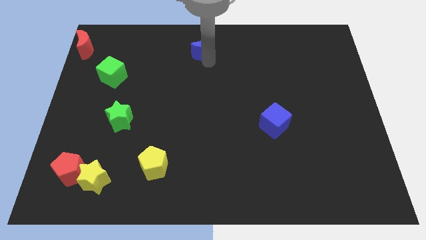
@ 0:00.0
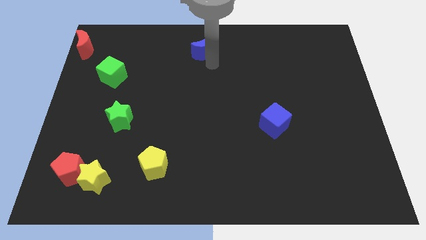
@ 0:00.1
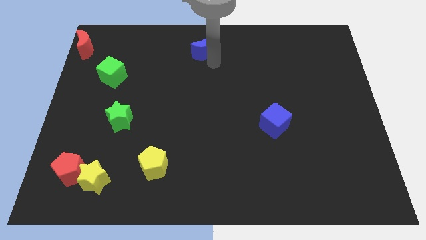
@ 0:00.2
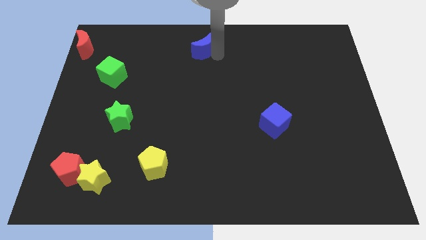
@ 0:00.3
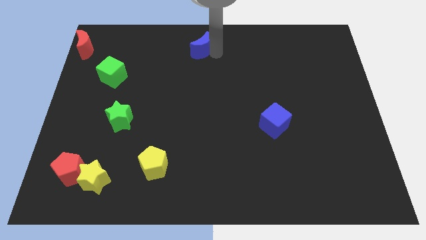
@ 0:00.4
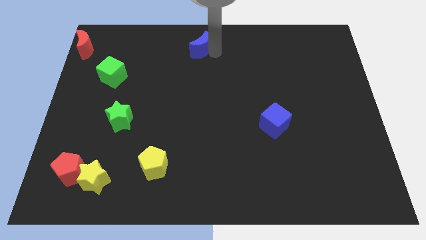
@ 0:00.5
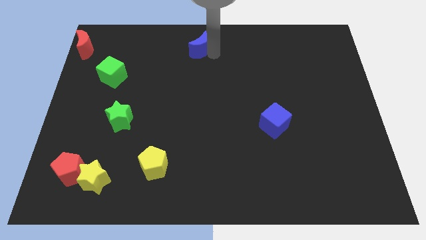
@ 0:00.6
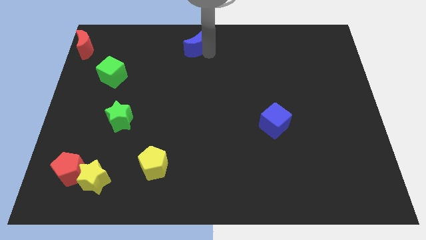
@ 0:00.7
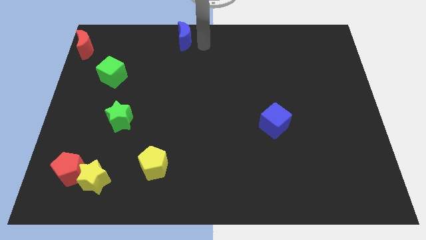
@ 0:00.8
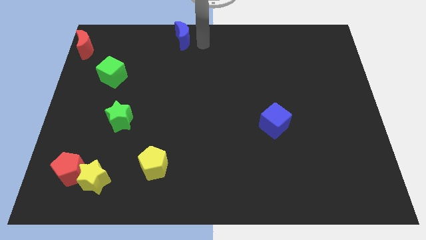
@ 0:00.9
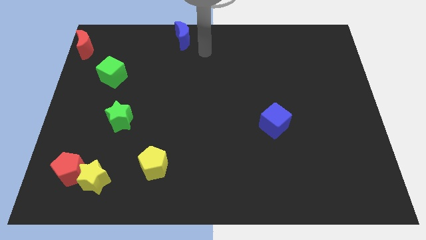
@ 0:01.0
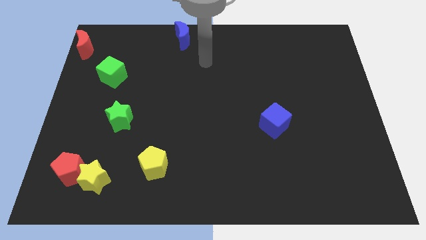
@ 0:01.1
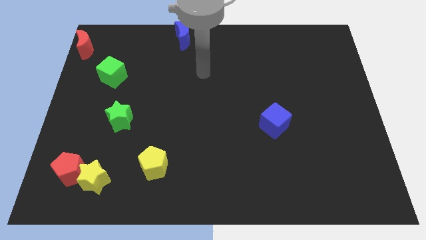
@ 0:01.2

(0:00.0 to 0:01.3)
move the blue moon towards the top side of the board

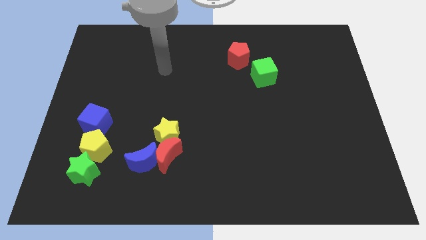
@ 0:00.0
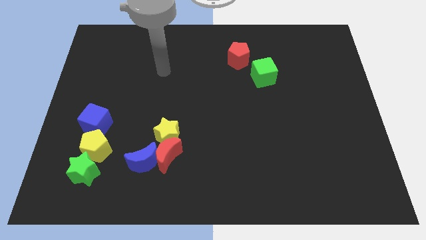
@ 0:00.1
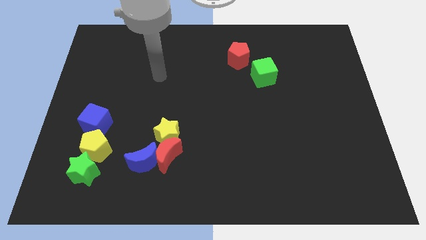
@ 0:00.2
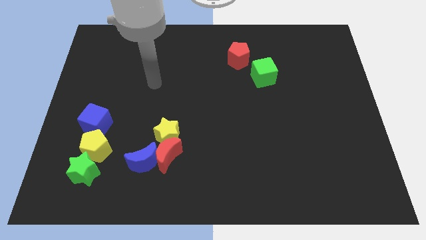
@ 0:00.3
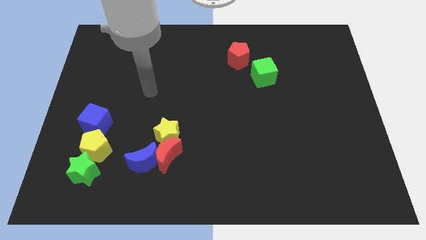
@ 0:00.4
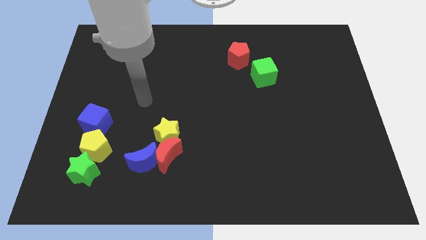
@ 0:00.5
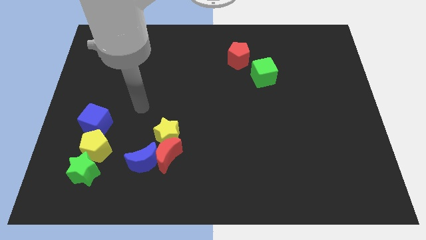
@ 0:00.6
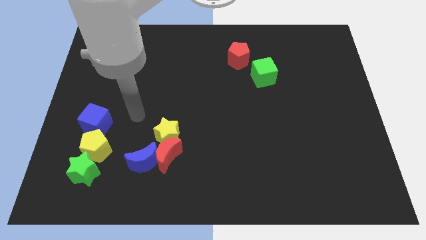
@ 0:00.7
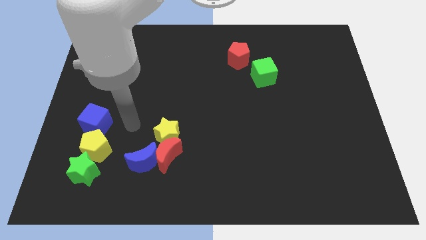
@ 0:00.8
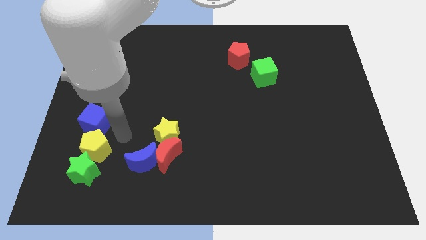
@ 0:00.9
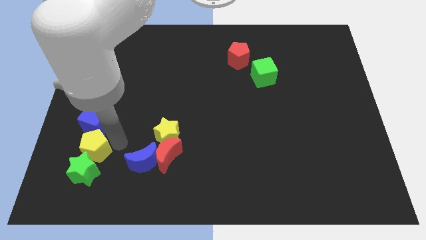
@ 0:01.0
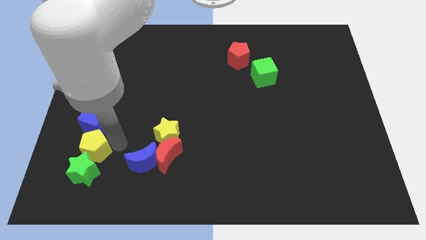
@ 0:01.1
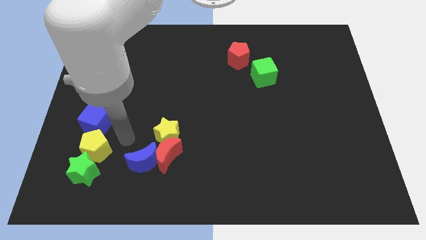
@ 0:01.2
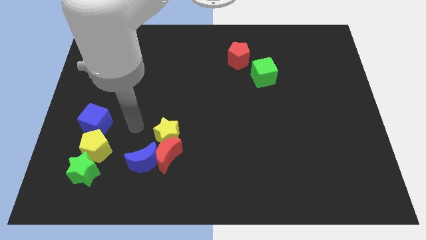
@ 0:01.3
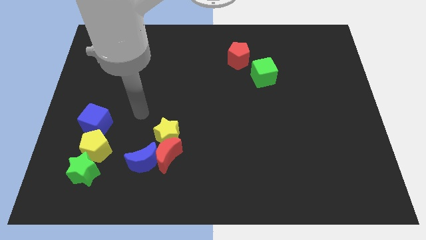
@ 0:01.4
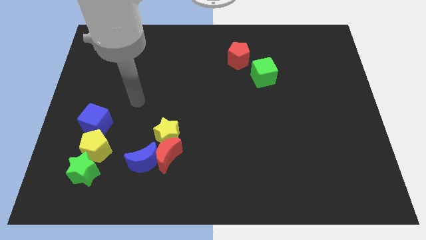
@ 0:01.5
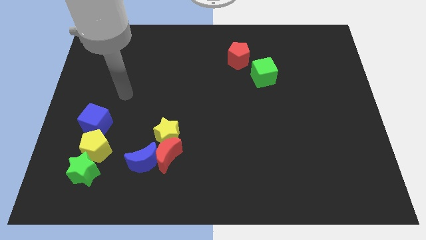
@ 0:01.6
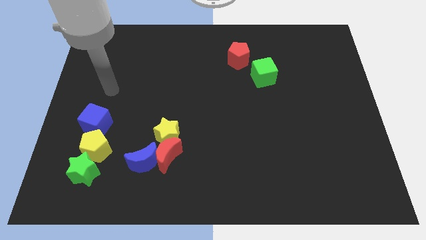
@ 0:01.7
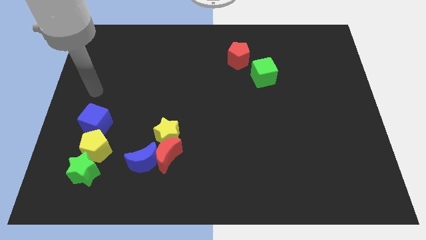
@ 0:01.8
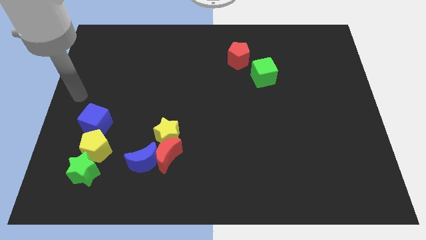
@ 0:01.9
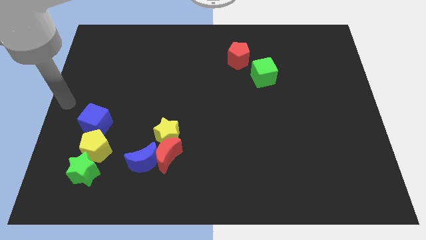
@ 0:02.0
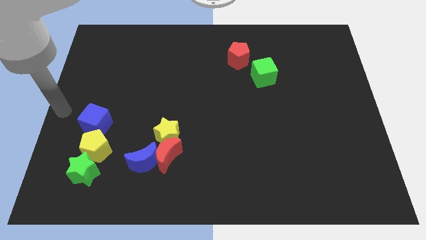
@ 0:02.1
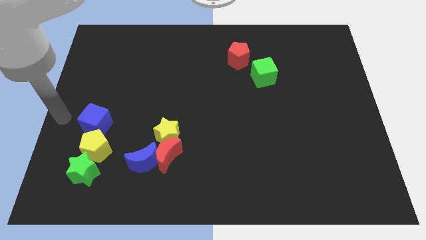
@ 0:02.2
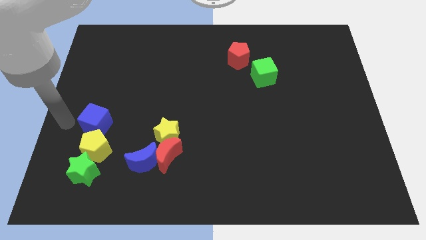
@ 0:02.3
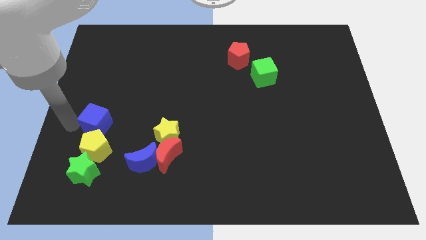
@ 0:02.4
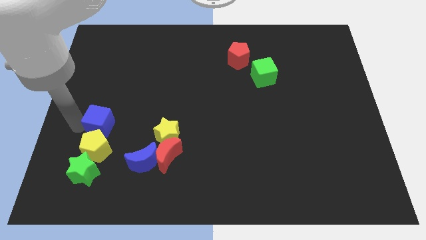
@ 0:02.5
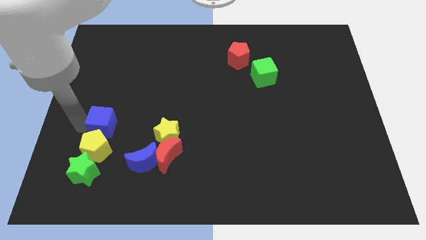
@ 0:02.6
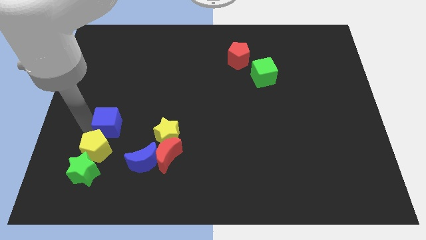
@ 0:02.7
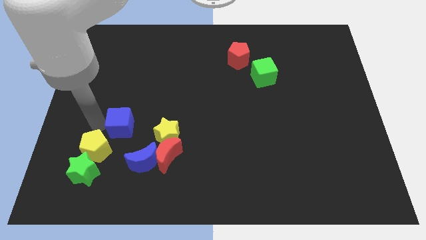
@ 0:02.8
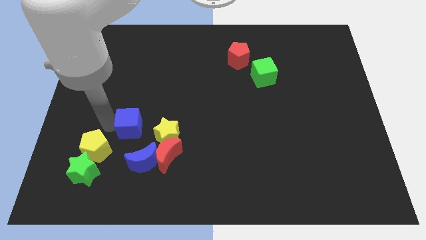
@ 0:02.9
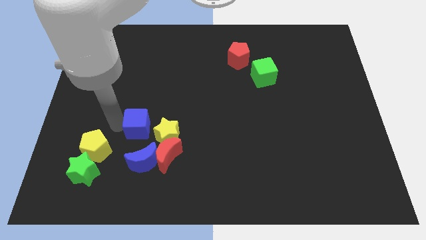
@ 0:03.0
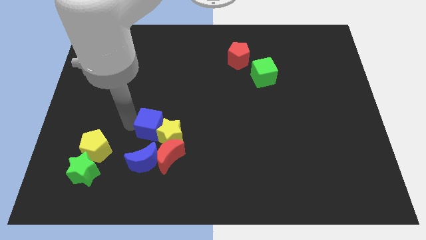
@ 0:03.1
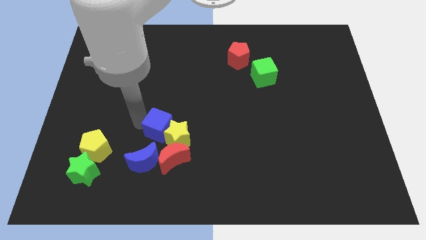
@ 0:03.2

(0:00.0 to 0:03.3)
push the blue cube into the left side of the yellow star

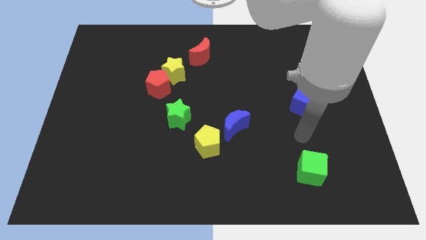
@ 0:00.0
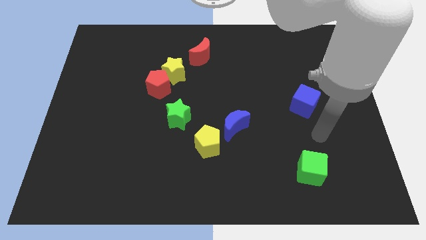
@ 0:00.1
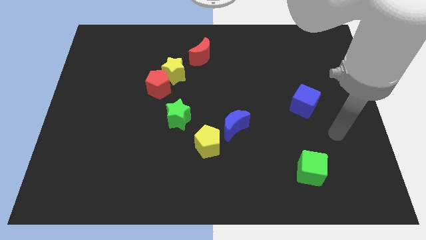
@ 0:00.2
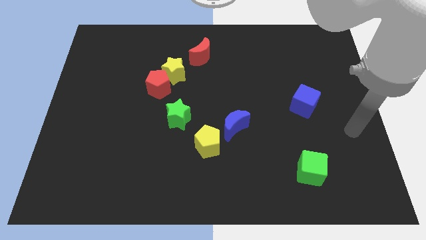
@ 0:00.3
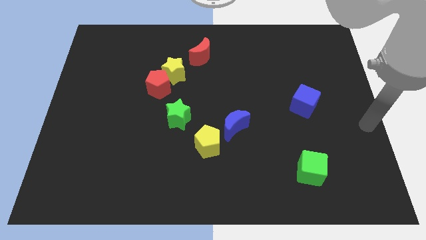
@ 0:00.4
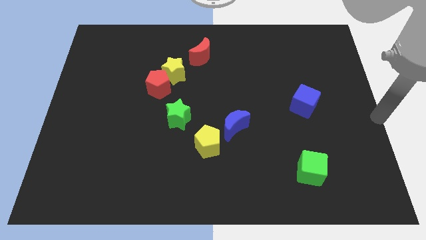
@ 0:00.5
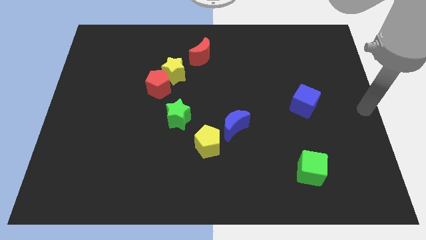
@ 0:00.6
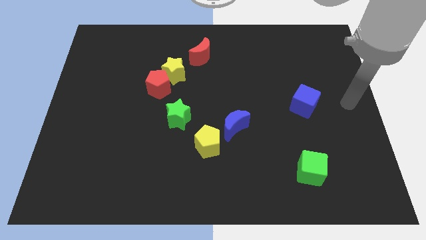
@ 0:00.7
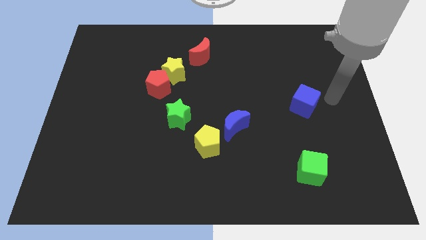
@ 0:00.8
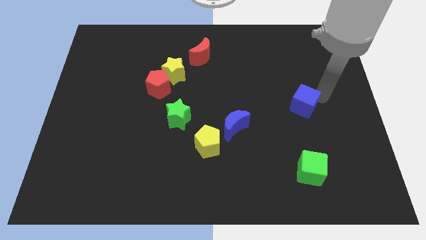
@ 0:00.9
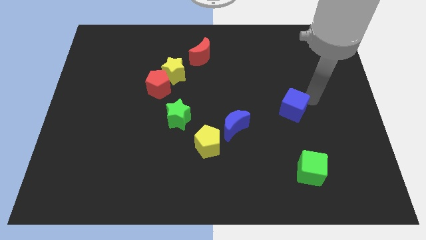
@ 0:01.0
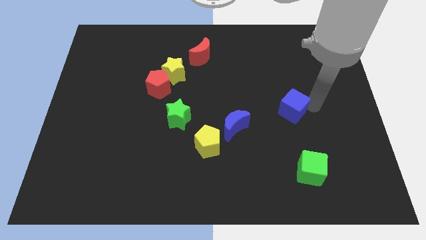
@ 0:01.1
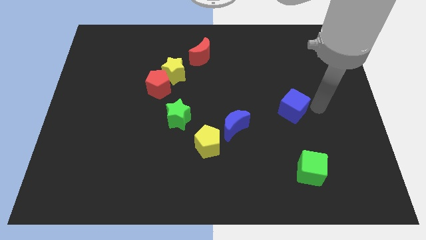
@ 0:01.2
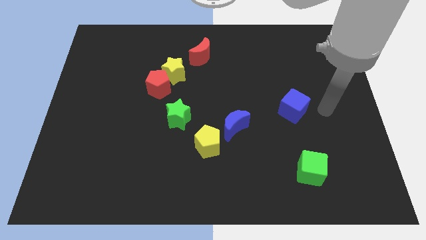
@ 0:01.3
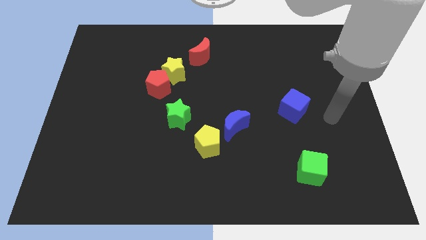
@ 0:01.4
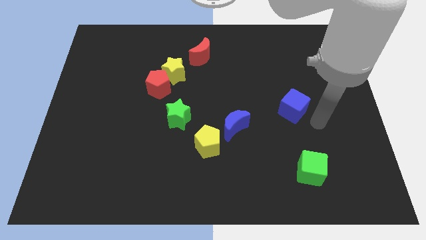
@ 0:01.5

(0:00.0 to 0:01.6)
slightly push the blue cube towards the blue crescent

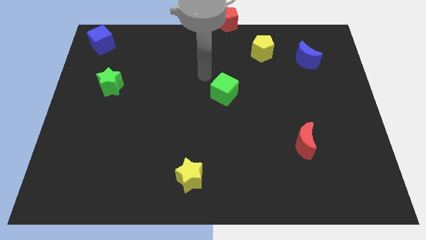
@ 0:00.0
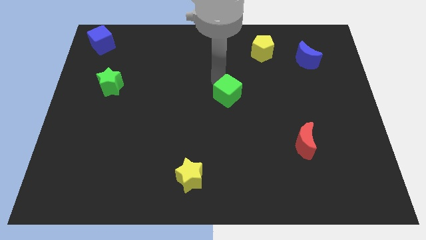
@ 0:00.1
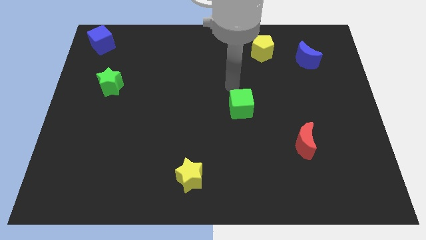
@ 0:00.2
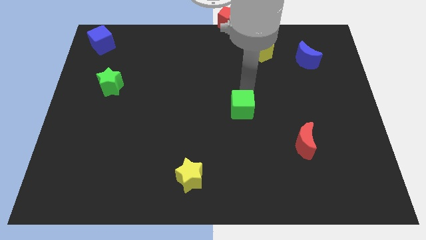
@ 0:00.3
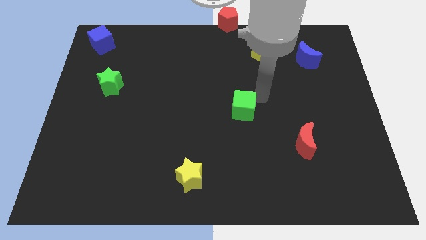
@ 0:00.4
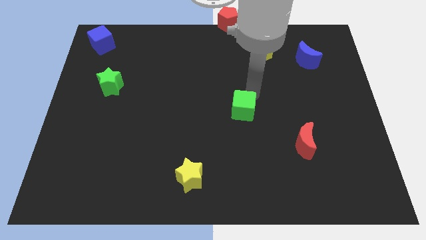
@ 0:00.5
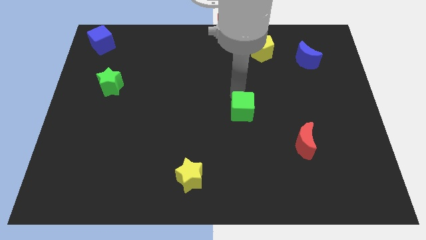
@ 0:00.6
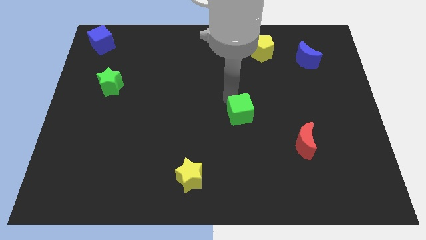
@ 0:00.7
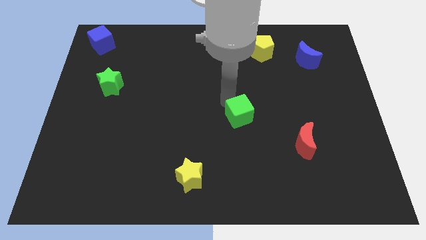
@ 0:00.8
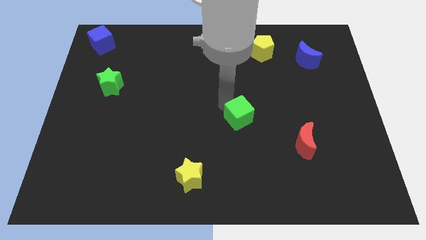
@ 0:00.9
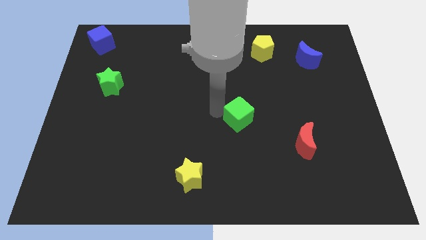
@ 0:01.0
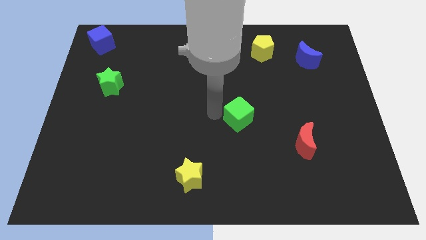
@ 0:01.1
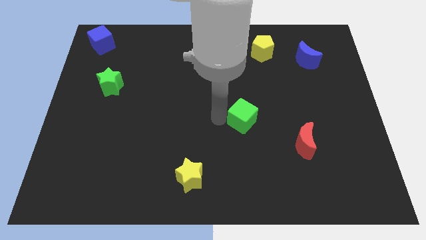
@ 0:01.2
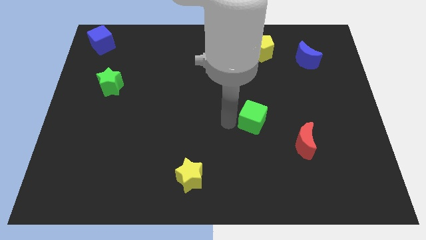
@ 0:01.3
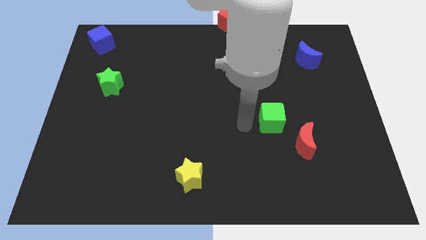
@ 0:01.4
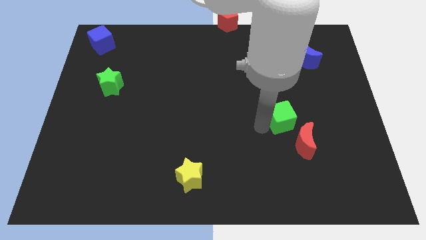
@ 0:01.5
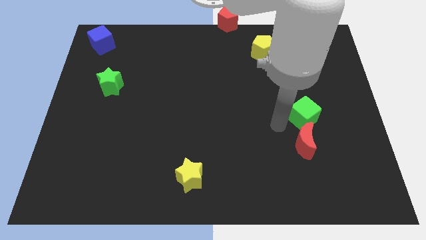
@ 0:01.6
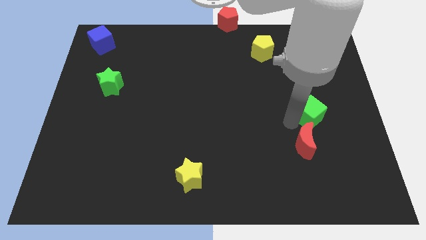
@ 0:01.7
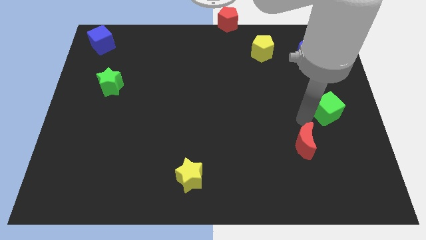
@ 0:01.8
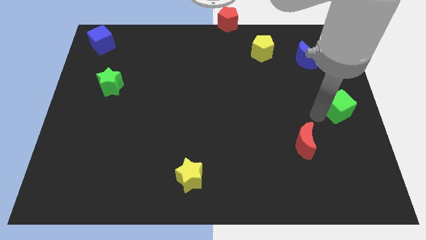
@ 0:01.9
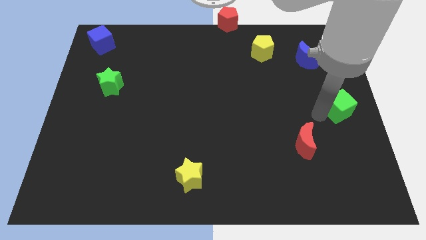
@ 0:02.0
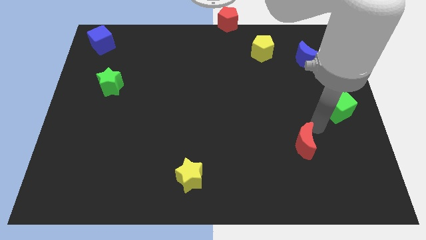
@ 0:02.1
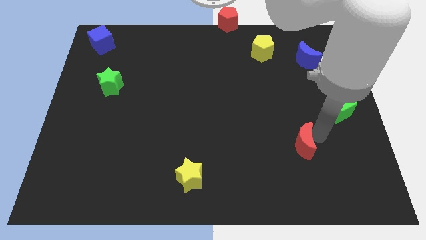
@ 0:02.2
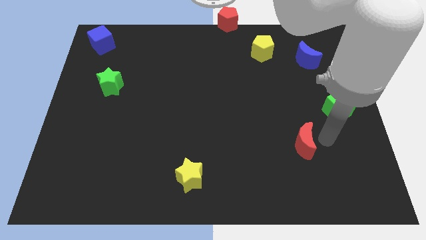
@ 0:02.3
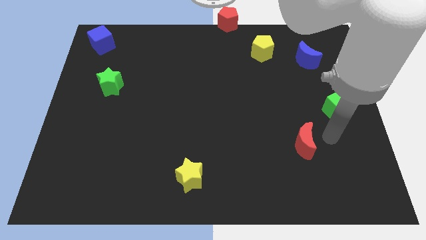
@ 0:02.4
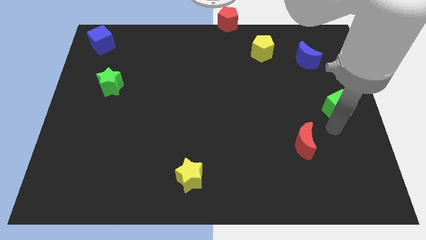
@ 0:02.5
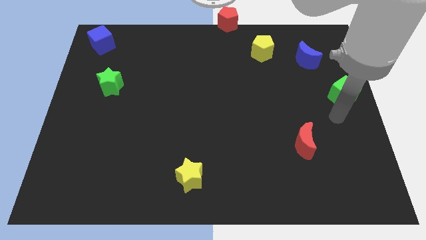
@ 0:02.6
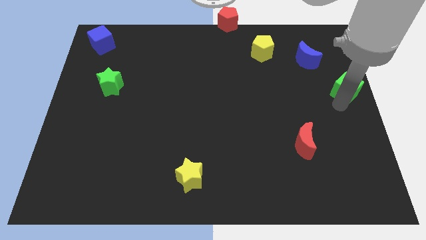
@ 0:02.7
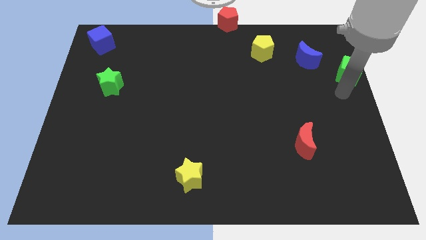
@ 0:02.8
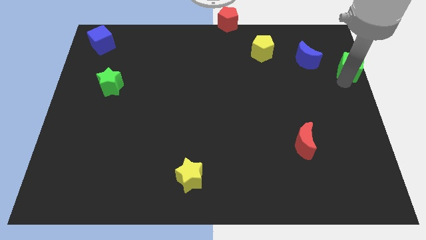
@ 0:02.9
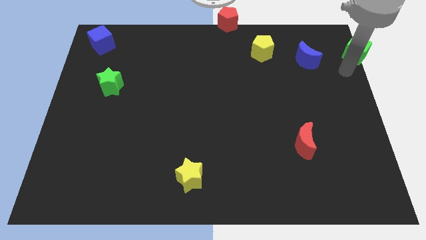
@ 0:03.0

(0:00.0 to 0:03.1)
move the green cube to the right of the blue crescent
